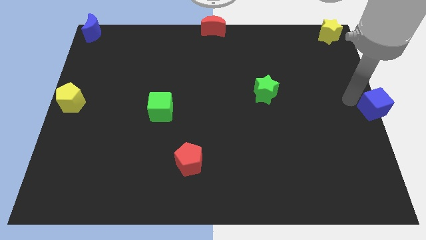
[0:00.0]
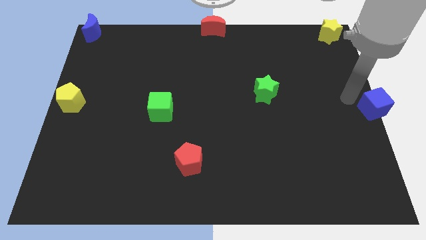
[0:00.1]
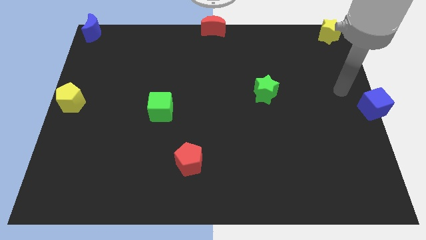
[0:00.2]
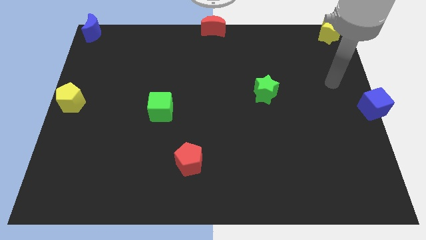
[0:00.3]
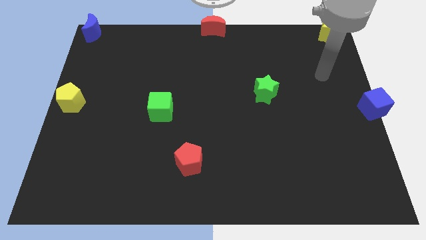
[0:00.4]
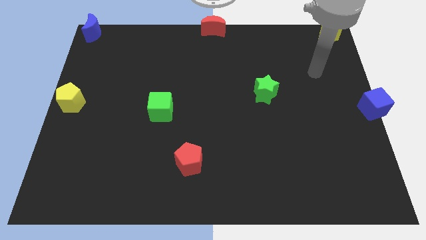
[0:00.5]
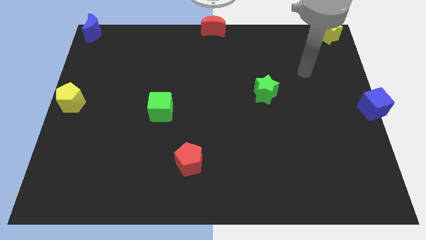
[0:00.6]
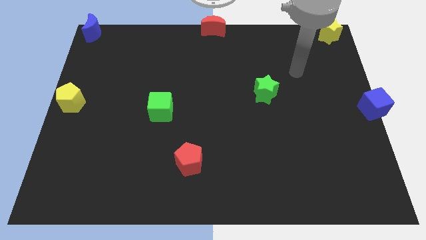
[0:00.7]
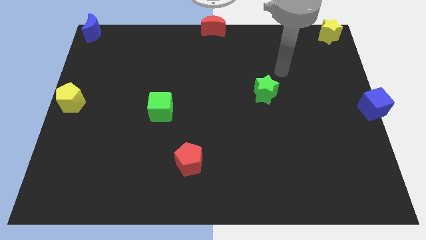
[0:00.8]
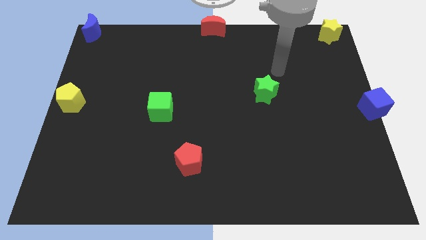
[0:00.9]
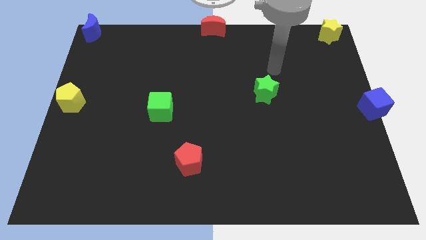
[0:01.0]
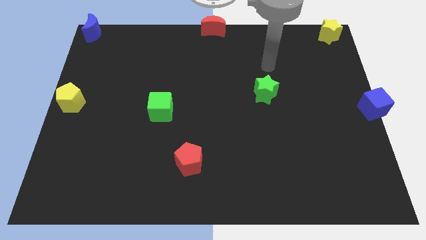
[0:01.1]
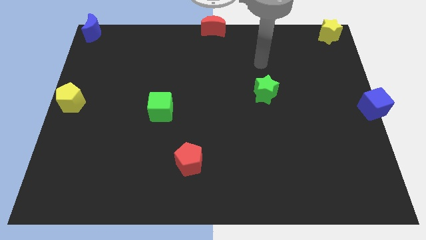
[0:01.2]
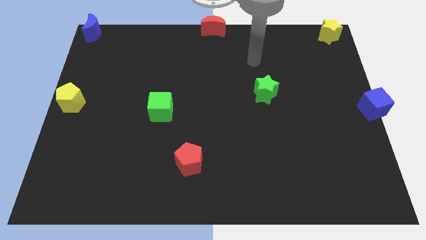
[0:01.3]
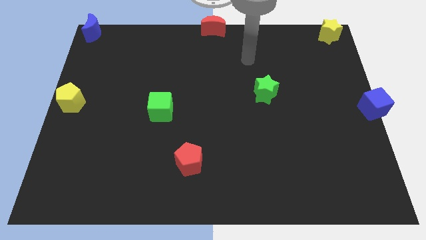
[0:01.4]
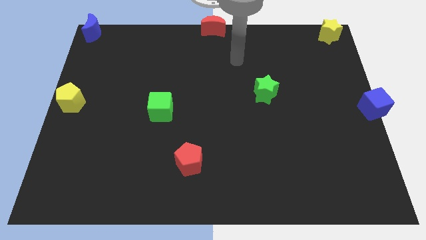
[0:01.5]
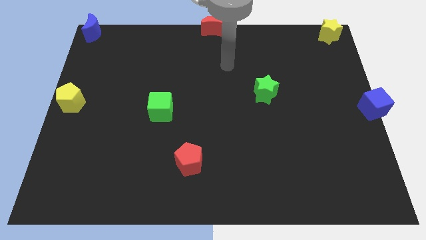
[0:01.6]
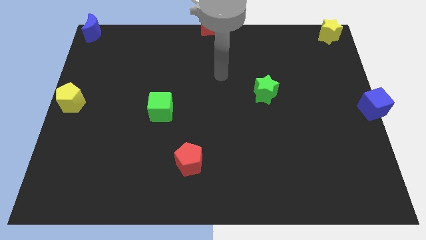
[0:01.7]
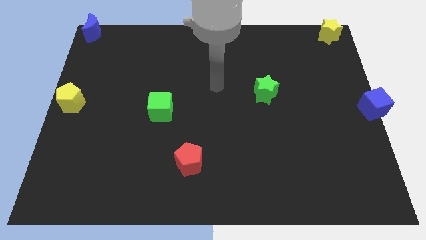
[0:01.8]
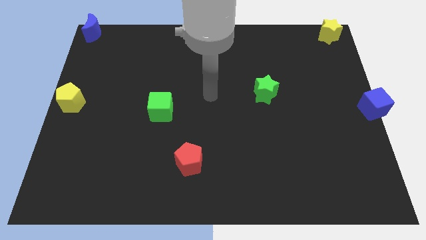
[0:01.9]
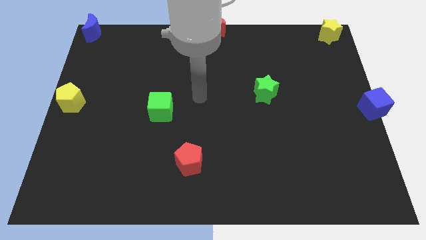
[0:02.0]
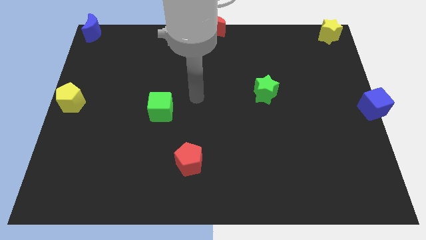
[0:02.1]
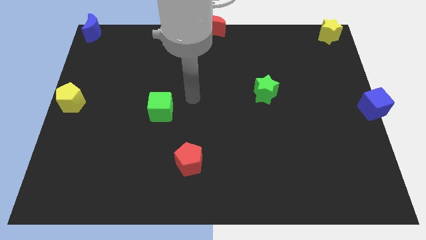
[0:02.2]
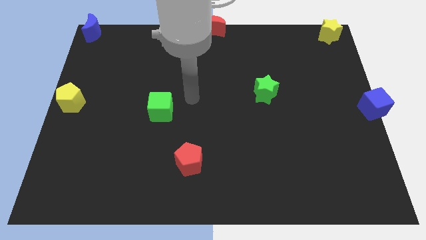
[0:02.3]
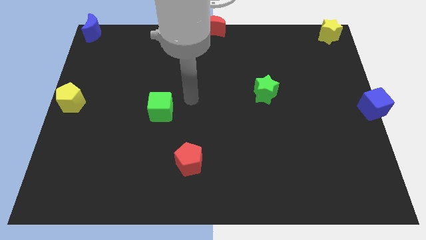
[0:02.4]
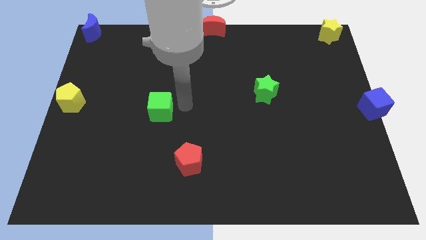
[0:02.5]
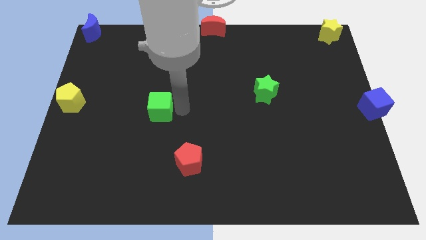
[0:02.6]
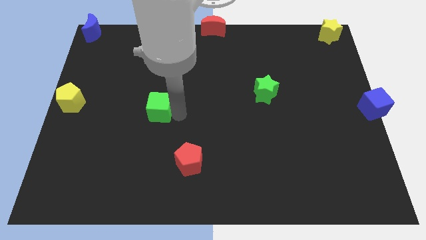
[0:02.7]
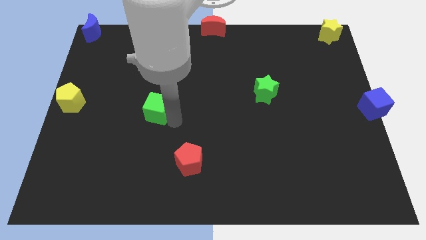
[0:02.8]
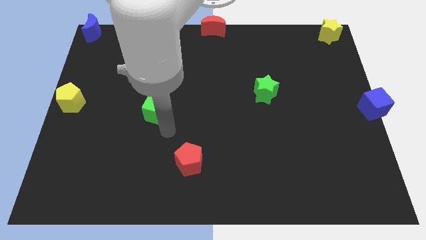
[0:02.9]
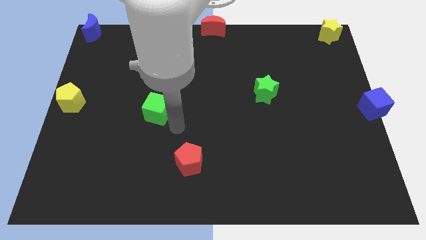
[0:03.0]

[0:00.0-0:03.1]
tap the bottom side of green cube

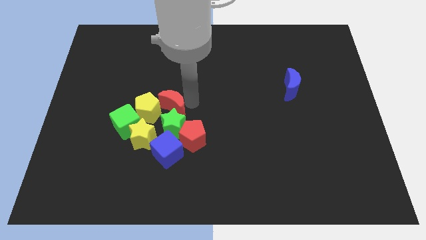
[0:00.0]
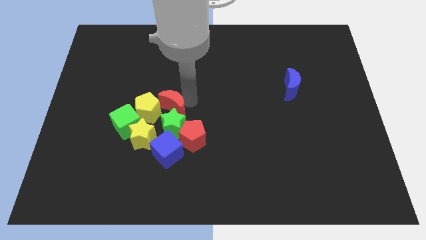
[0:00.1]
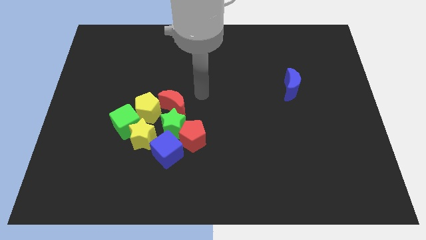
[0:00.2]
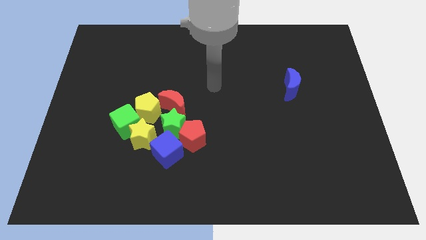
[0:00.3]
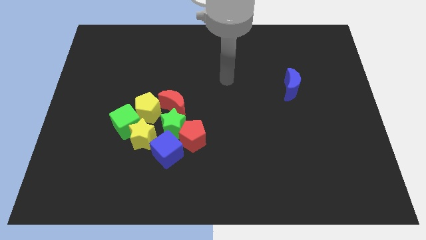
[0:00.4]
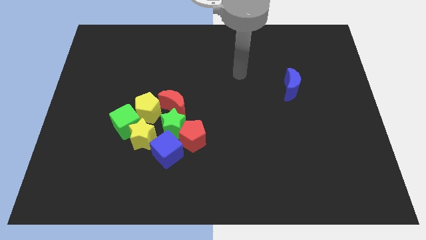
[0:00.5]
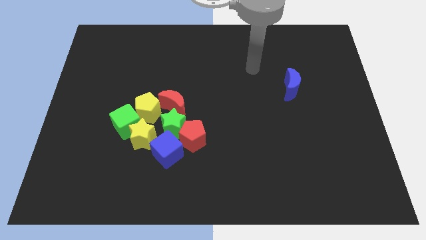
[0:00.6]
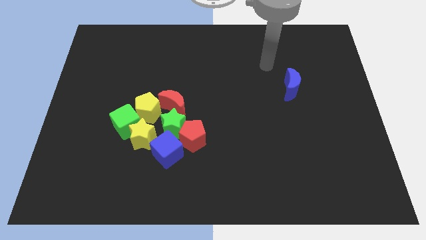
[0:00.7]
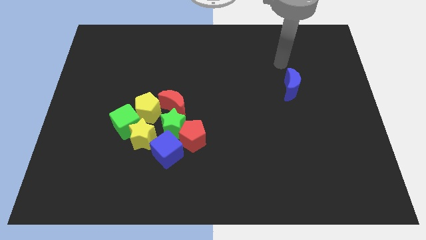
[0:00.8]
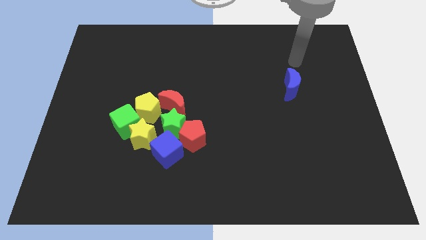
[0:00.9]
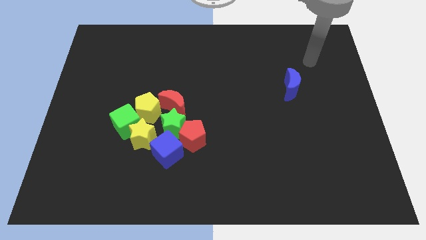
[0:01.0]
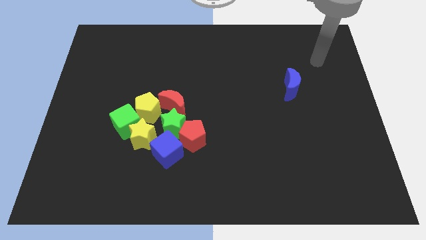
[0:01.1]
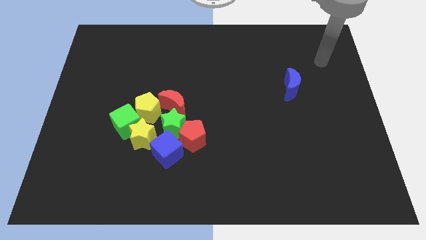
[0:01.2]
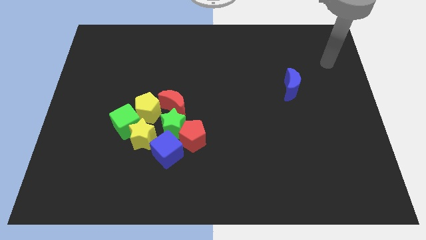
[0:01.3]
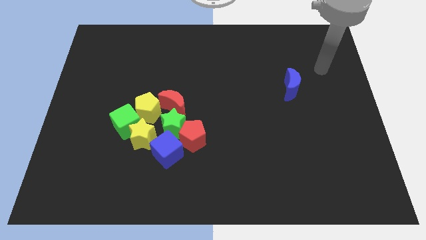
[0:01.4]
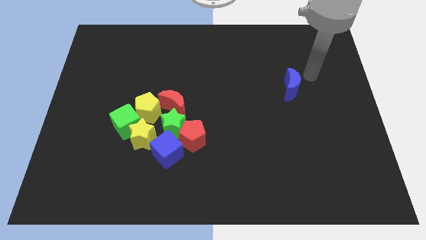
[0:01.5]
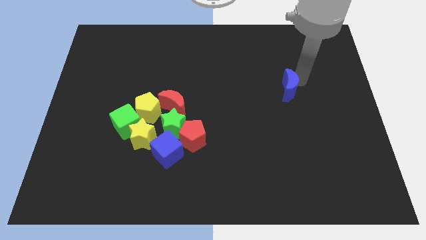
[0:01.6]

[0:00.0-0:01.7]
move your arm to the blue moon

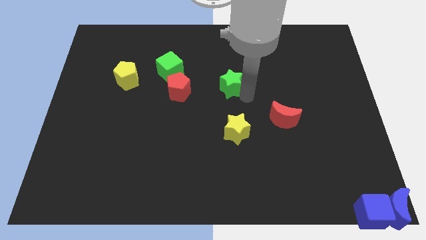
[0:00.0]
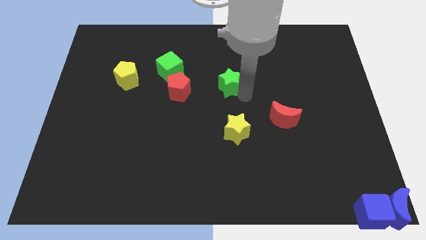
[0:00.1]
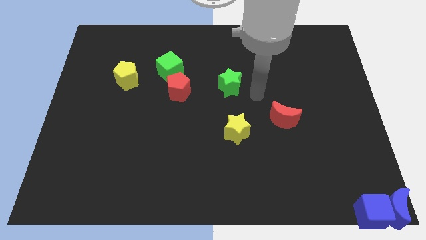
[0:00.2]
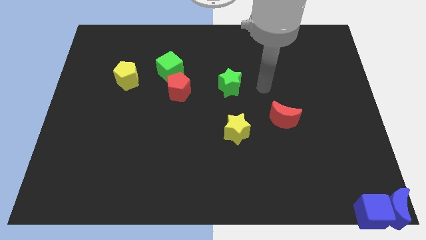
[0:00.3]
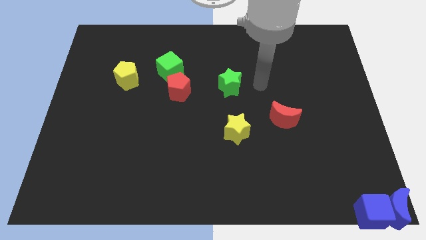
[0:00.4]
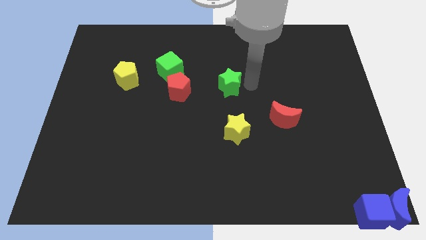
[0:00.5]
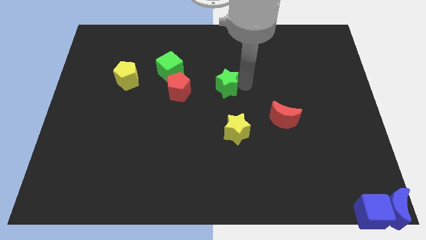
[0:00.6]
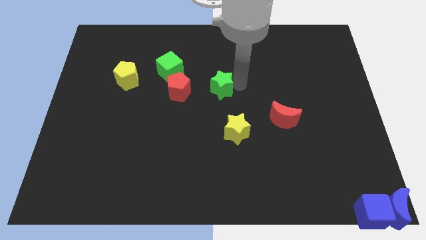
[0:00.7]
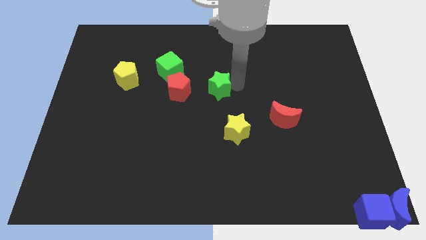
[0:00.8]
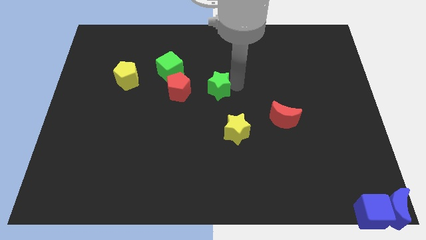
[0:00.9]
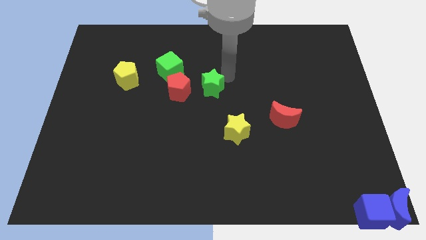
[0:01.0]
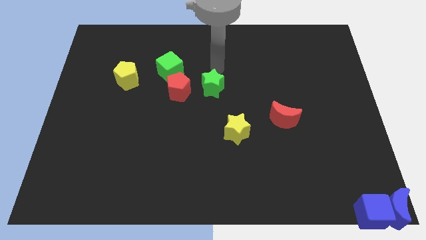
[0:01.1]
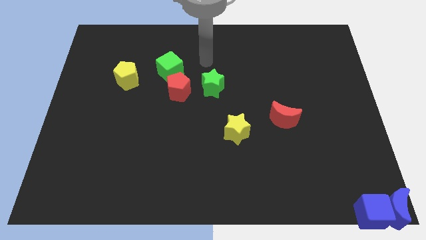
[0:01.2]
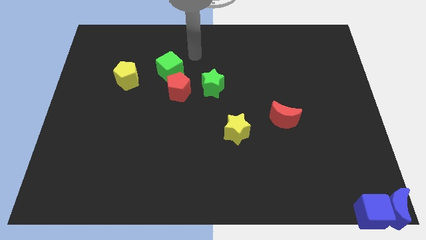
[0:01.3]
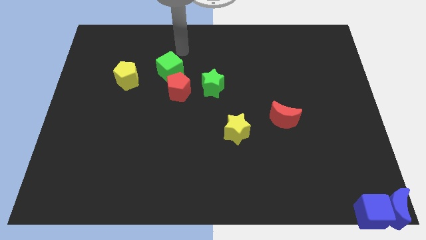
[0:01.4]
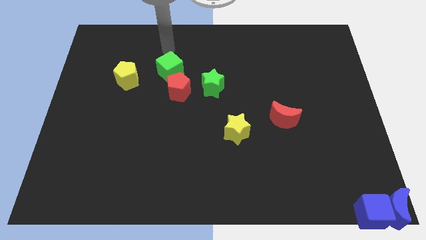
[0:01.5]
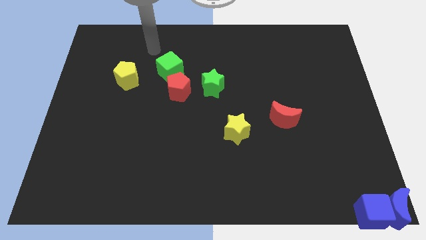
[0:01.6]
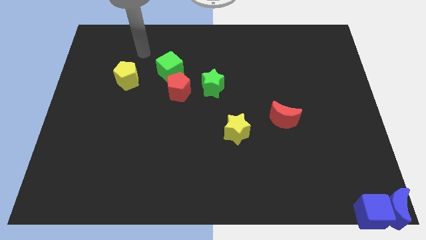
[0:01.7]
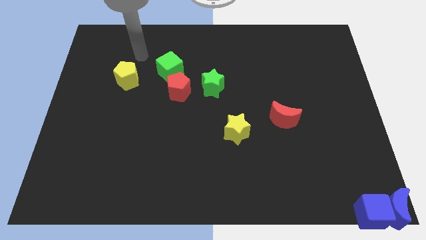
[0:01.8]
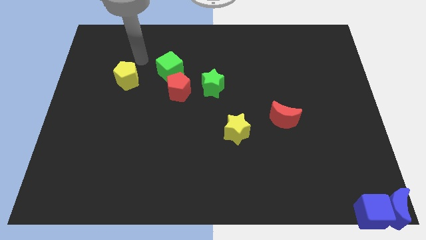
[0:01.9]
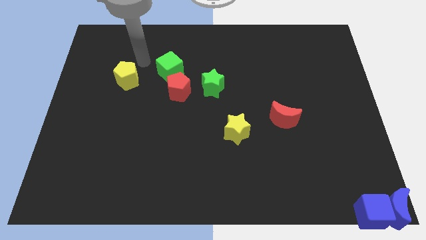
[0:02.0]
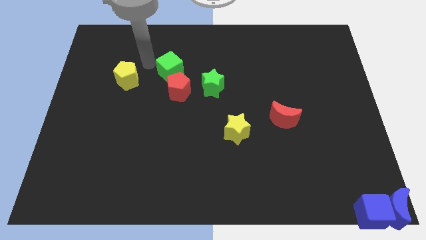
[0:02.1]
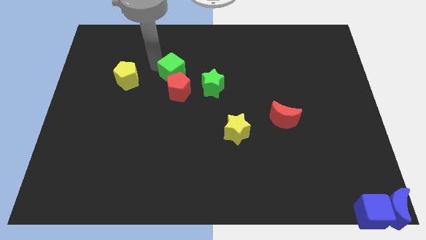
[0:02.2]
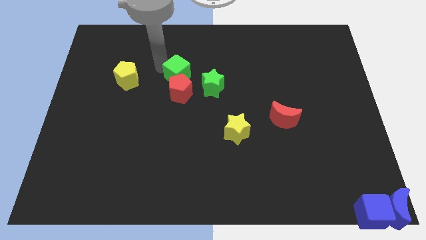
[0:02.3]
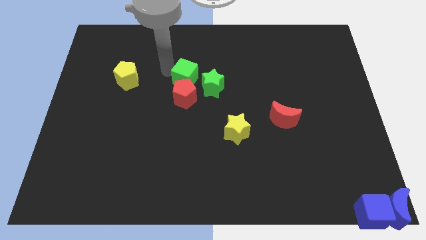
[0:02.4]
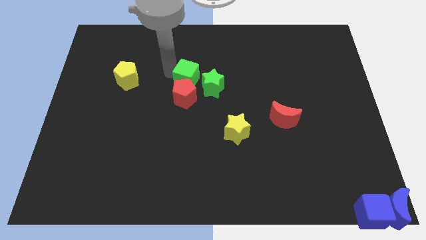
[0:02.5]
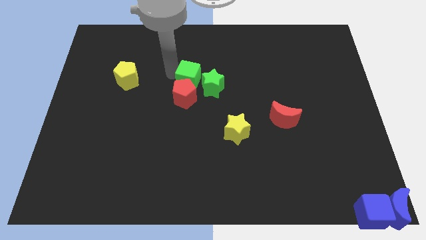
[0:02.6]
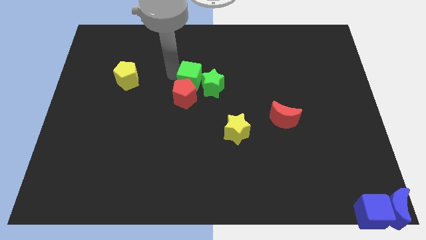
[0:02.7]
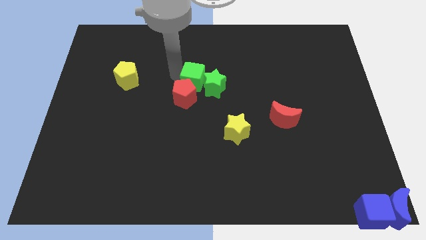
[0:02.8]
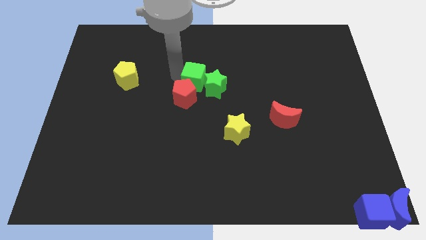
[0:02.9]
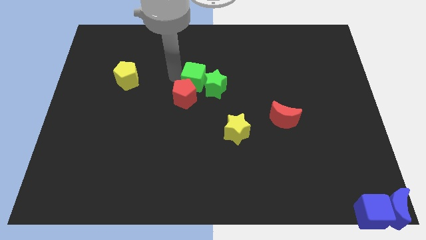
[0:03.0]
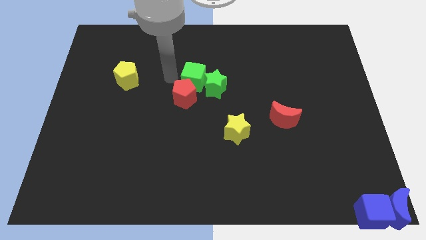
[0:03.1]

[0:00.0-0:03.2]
place green cube left to the green star

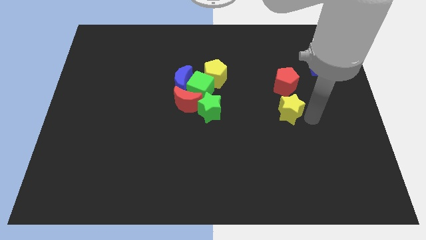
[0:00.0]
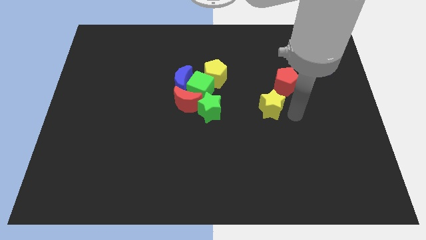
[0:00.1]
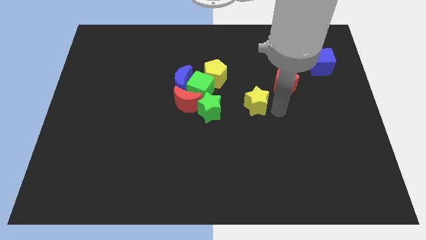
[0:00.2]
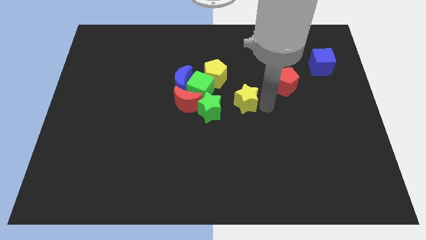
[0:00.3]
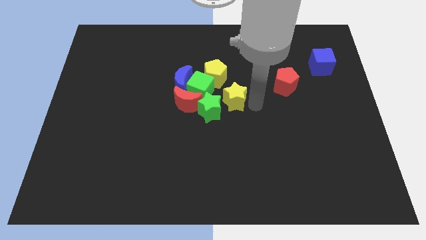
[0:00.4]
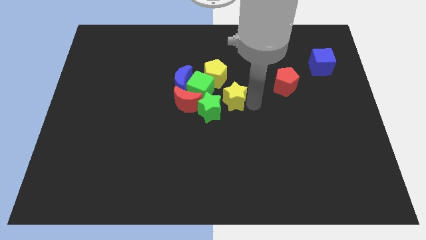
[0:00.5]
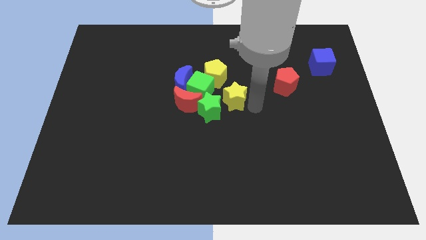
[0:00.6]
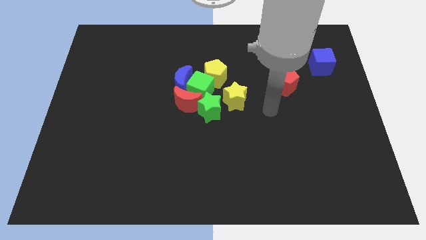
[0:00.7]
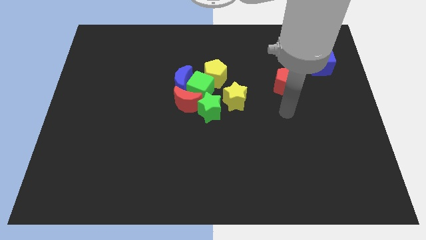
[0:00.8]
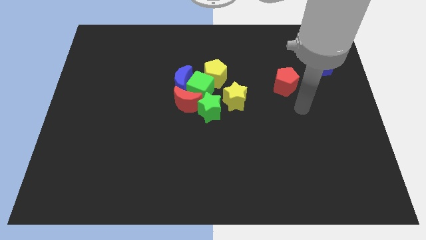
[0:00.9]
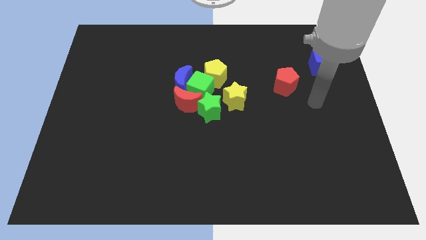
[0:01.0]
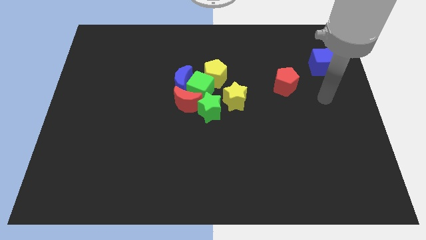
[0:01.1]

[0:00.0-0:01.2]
push the yellow star close to the green cube
